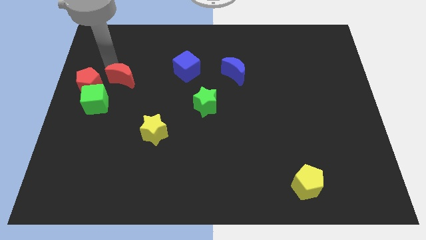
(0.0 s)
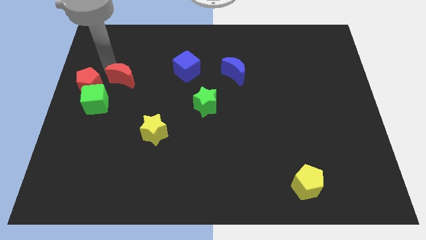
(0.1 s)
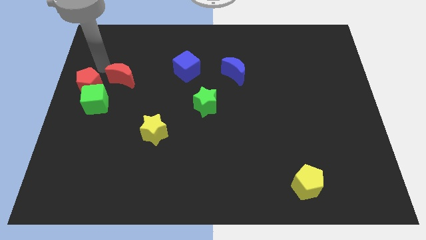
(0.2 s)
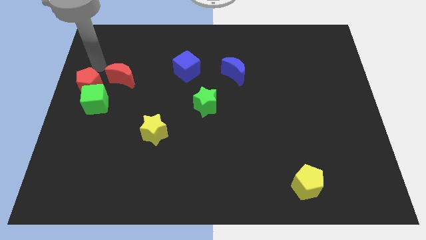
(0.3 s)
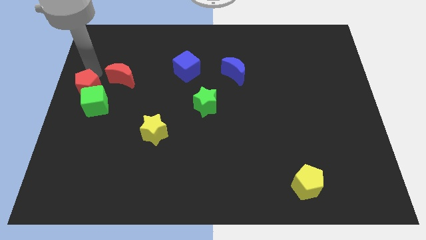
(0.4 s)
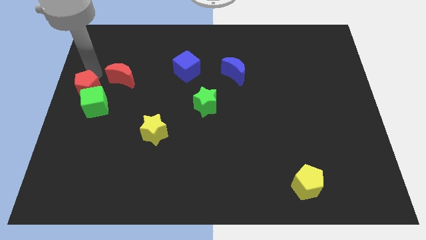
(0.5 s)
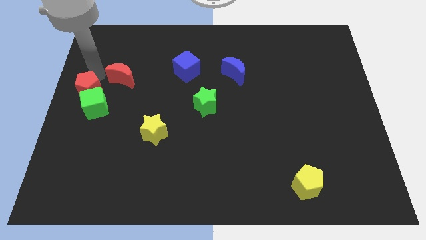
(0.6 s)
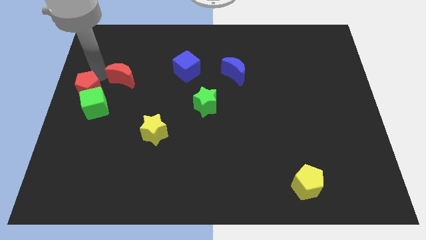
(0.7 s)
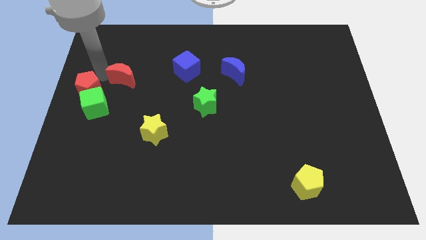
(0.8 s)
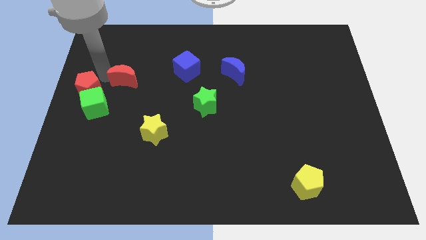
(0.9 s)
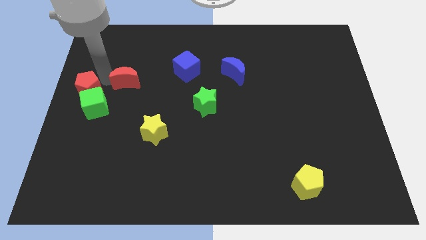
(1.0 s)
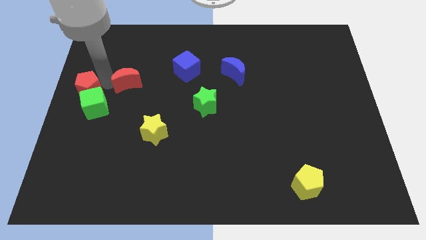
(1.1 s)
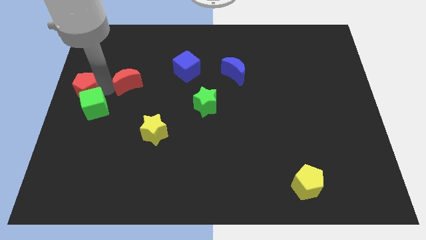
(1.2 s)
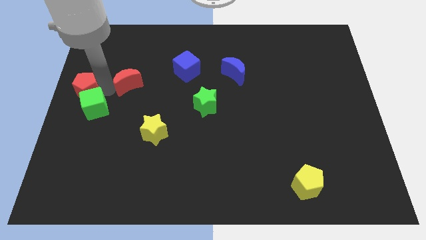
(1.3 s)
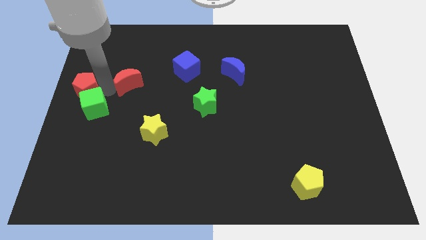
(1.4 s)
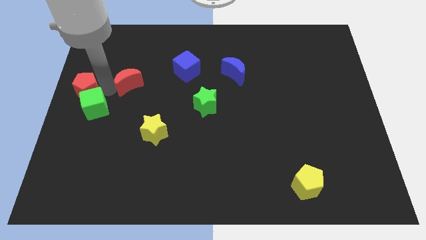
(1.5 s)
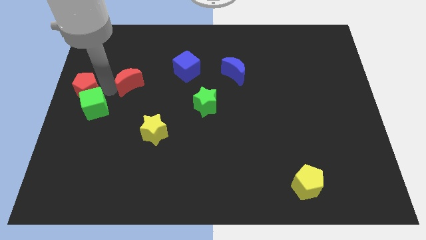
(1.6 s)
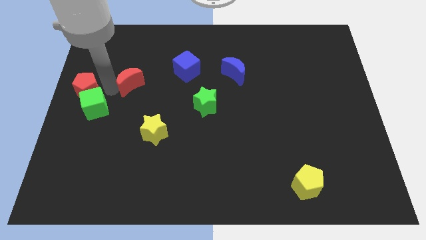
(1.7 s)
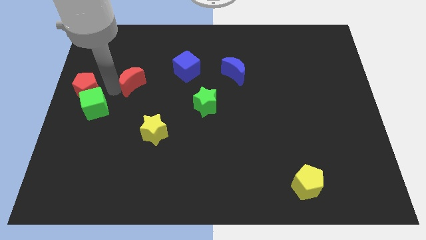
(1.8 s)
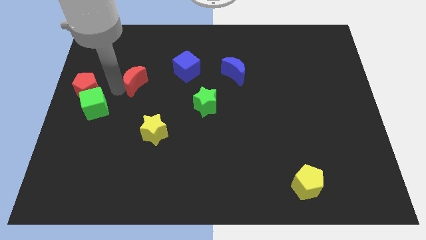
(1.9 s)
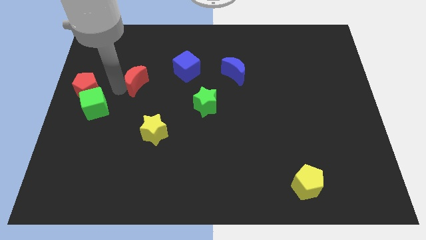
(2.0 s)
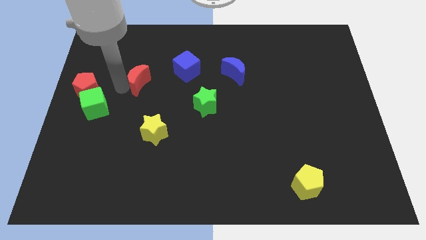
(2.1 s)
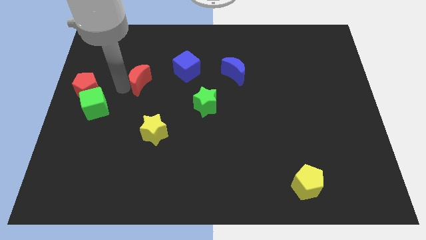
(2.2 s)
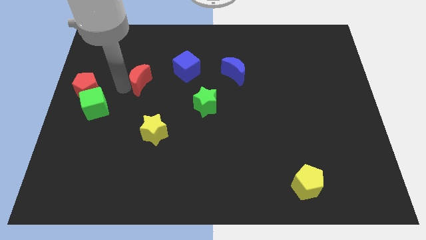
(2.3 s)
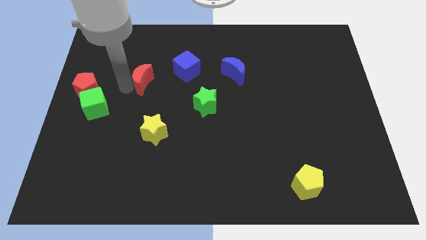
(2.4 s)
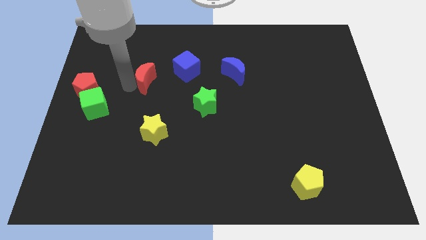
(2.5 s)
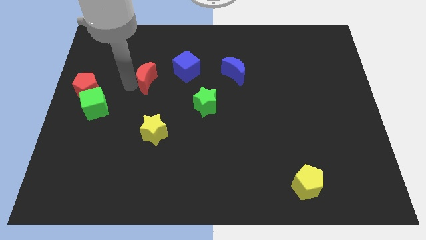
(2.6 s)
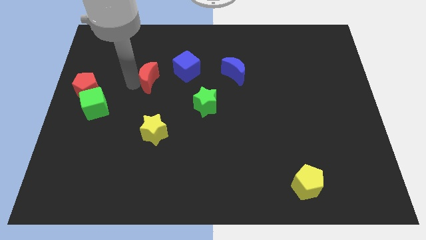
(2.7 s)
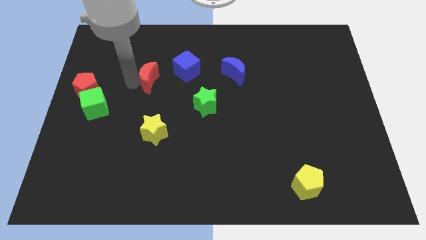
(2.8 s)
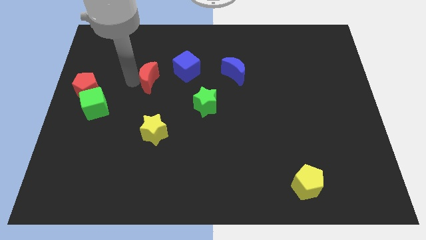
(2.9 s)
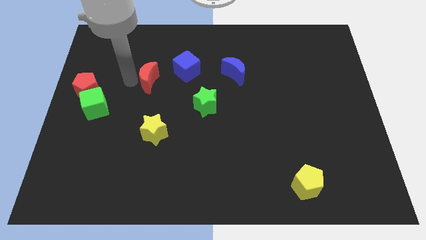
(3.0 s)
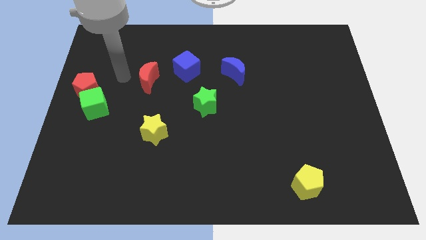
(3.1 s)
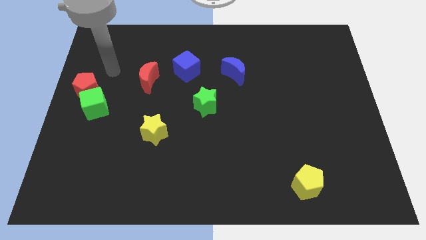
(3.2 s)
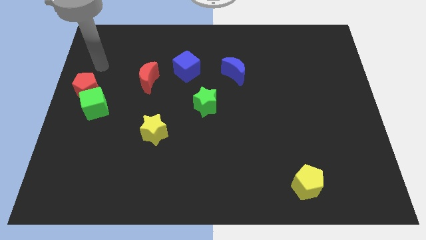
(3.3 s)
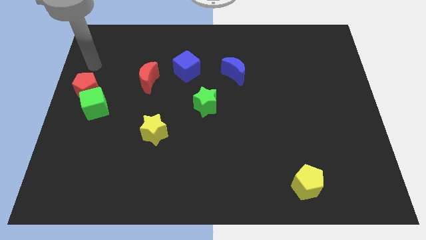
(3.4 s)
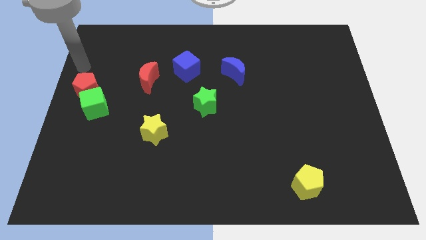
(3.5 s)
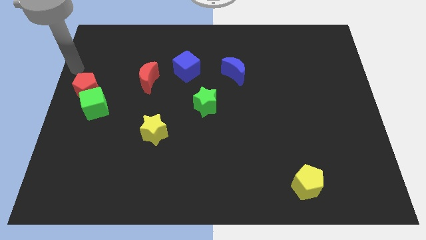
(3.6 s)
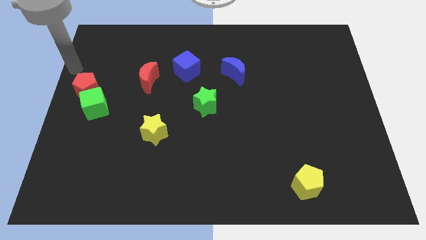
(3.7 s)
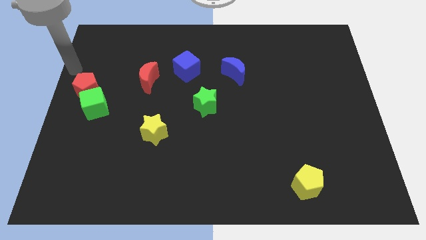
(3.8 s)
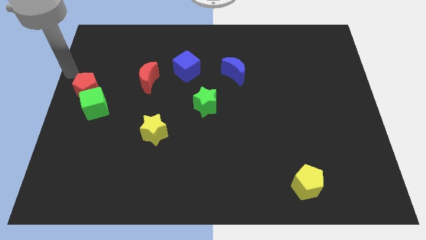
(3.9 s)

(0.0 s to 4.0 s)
push the red moon to the left of the blue cube

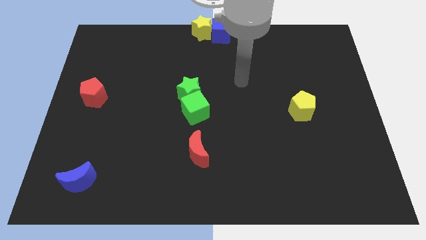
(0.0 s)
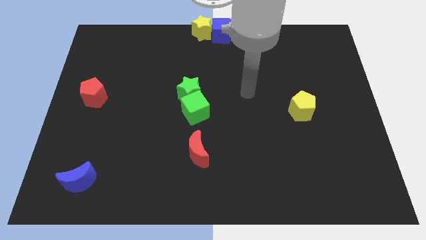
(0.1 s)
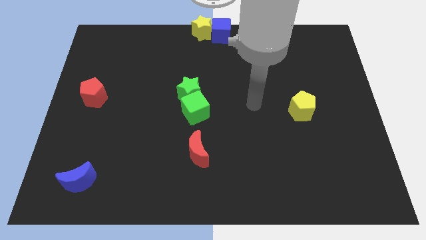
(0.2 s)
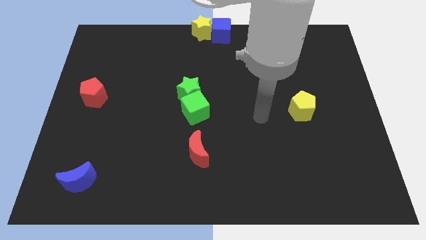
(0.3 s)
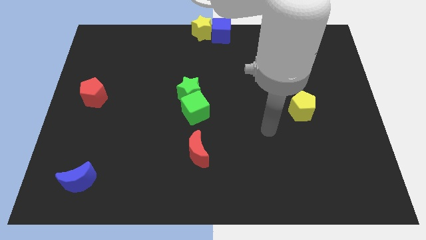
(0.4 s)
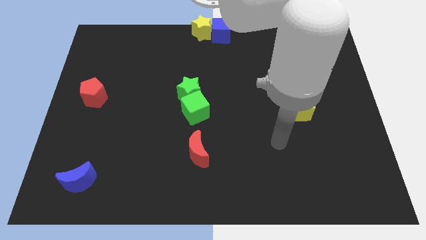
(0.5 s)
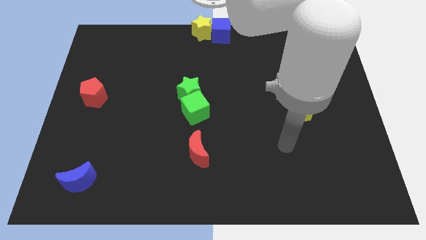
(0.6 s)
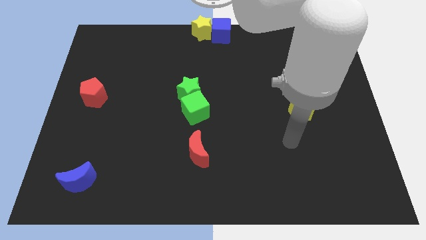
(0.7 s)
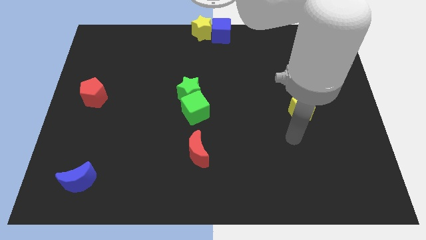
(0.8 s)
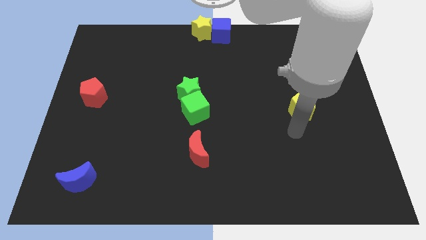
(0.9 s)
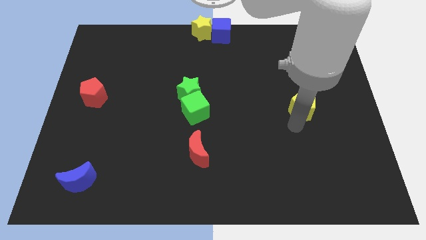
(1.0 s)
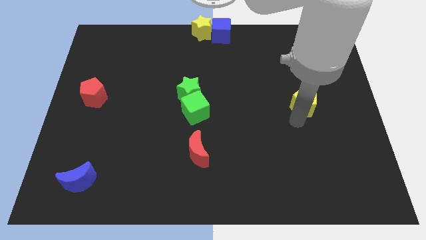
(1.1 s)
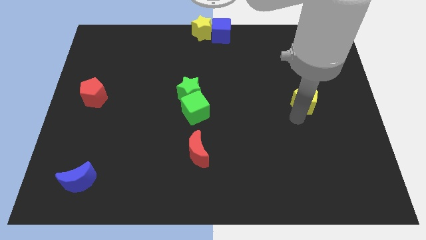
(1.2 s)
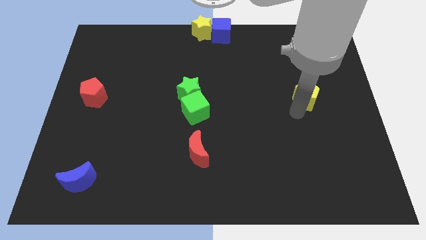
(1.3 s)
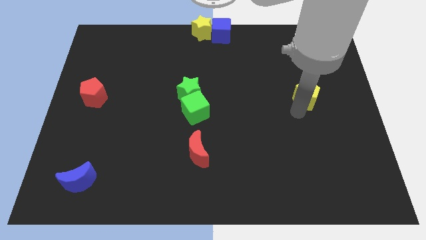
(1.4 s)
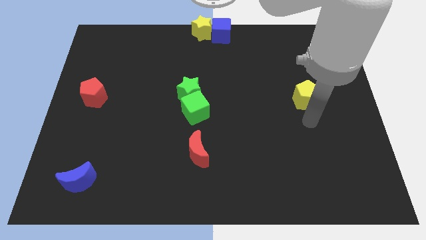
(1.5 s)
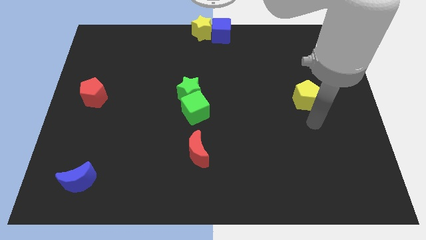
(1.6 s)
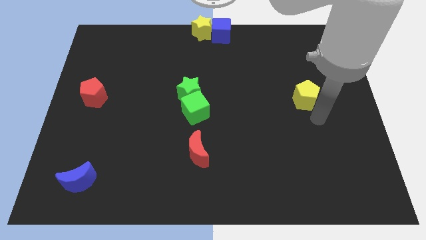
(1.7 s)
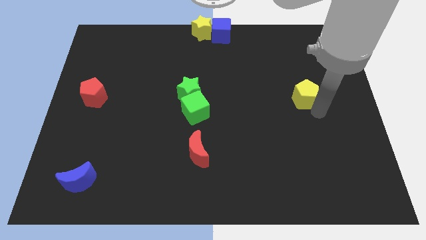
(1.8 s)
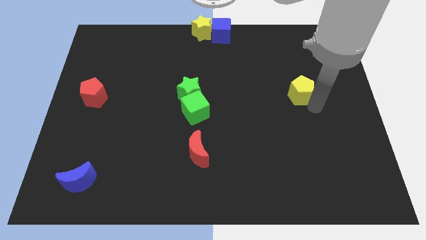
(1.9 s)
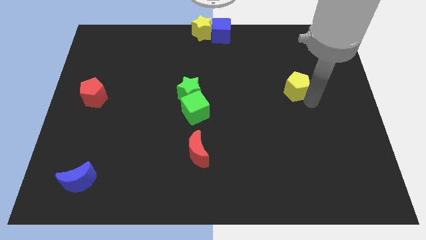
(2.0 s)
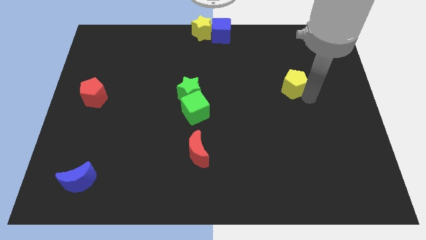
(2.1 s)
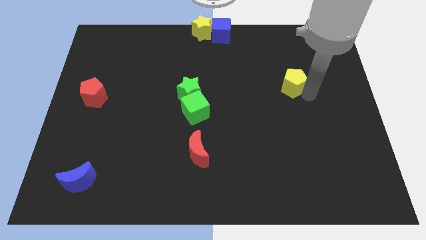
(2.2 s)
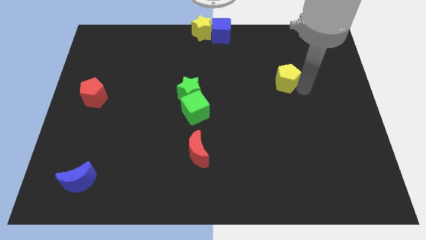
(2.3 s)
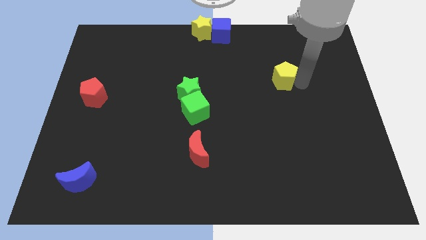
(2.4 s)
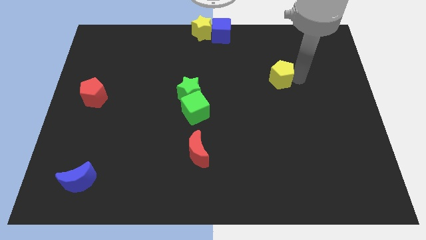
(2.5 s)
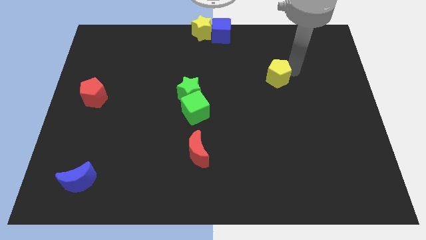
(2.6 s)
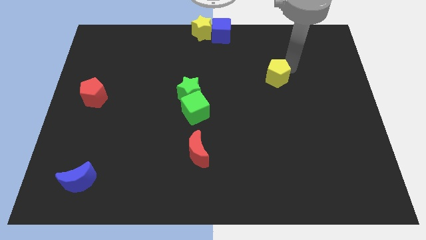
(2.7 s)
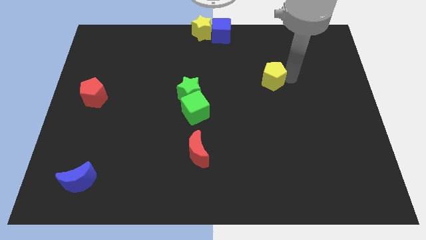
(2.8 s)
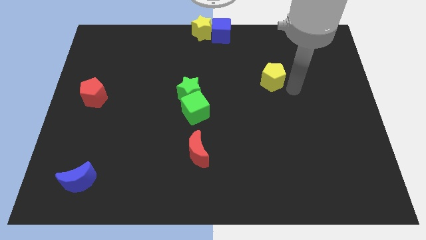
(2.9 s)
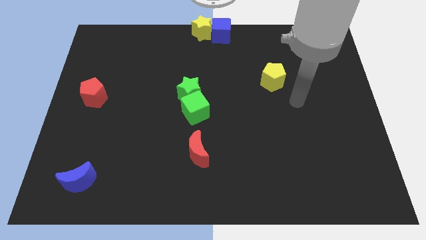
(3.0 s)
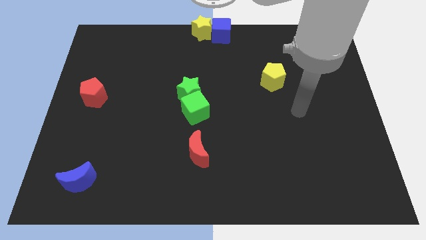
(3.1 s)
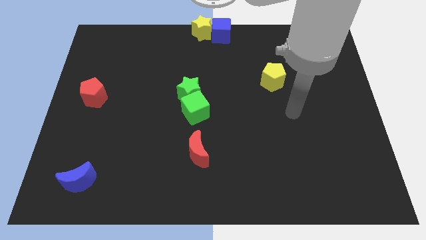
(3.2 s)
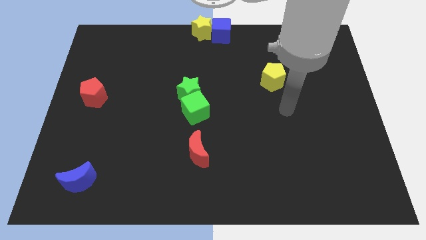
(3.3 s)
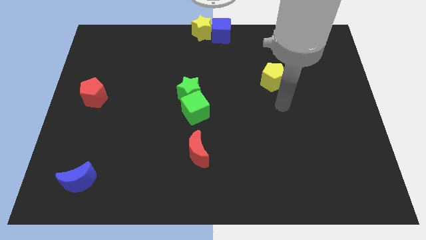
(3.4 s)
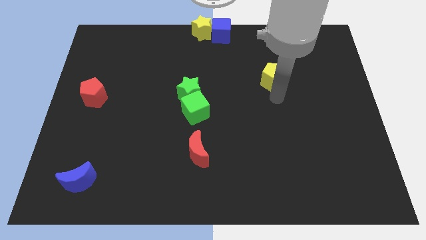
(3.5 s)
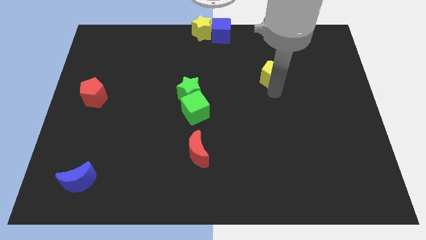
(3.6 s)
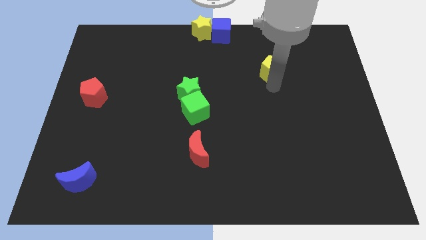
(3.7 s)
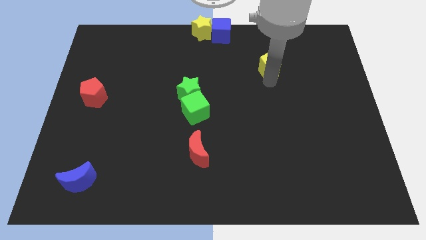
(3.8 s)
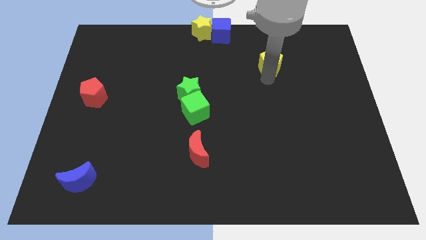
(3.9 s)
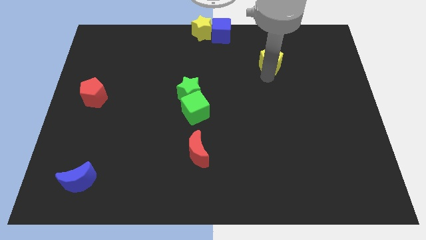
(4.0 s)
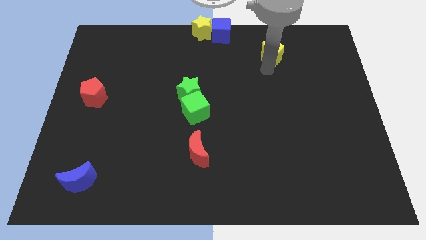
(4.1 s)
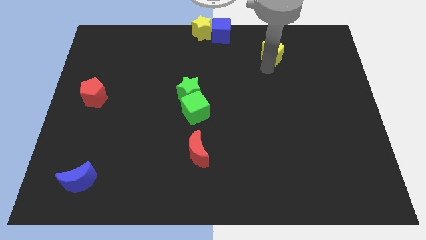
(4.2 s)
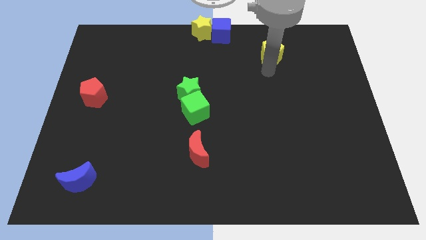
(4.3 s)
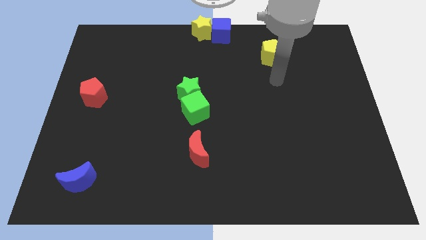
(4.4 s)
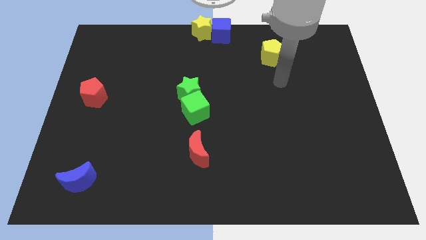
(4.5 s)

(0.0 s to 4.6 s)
move the yellow pentagon to the top of the board

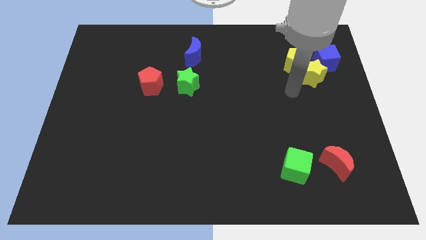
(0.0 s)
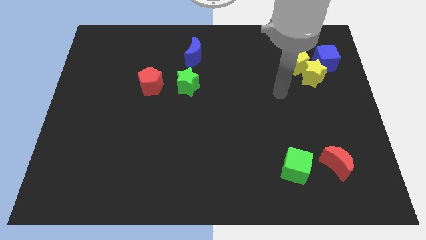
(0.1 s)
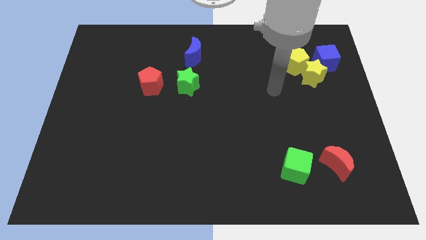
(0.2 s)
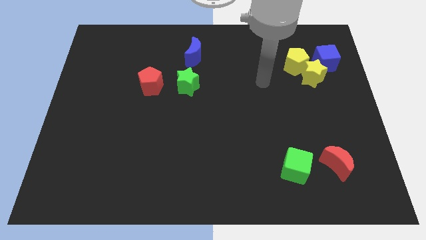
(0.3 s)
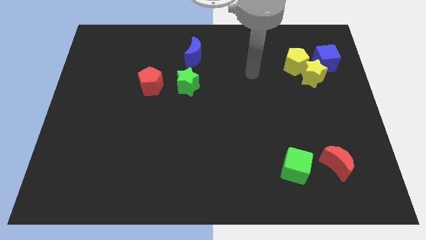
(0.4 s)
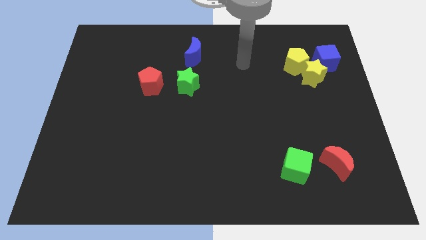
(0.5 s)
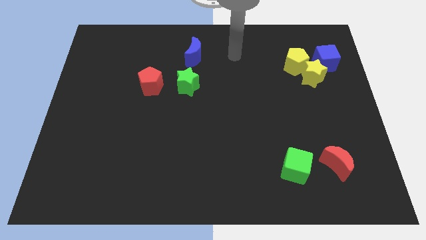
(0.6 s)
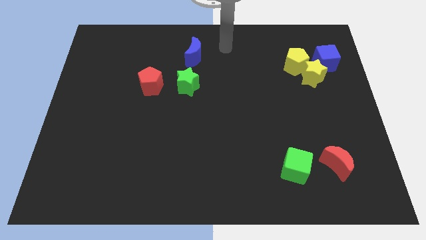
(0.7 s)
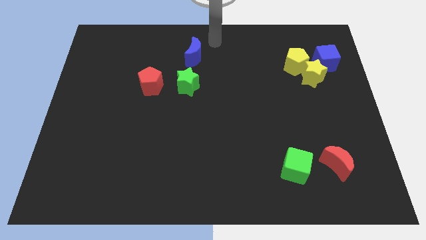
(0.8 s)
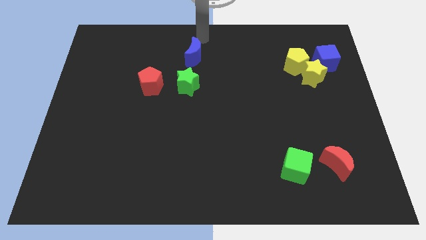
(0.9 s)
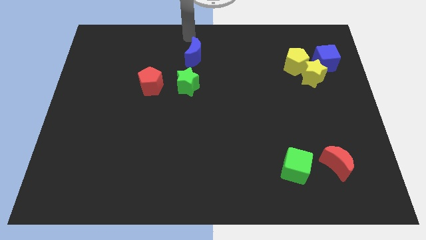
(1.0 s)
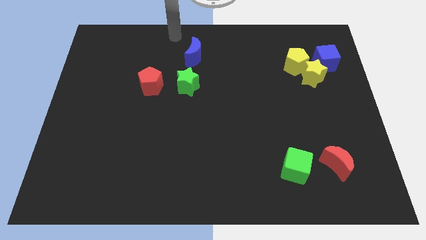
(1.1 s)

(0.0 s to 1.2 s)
move your arm to the top of the blue crescent
